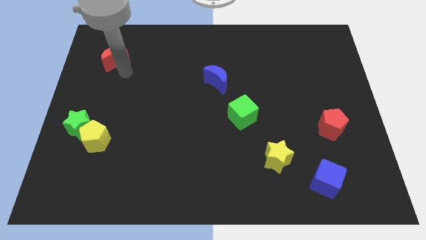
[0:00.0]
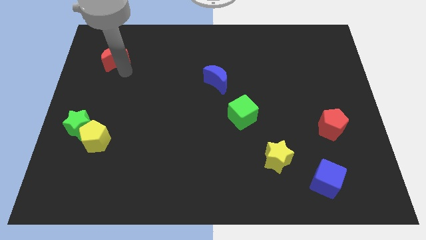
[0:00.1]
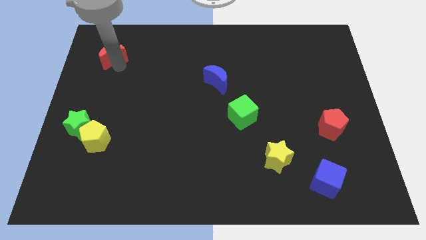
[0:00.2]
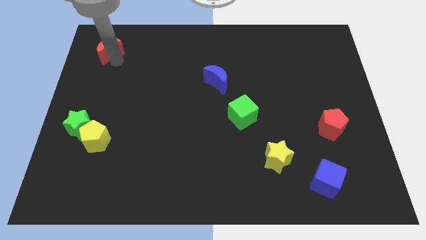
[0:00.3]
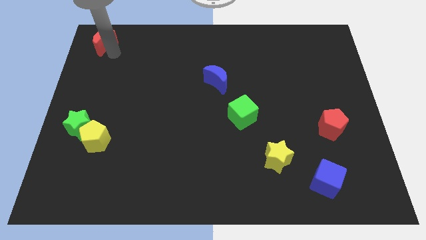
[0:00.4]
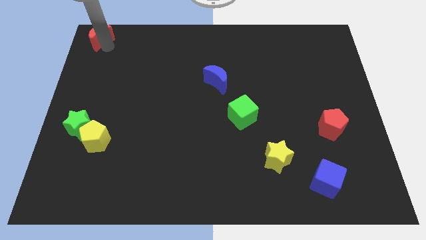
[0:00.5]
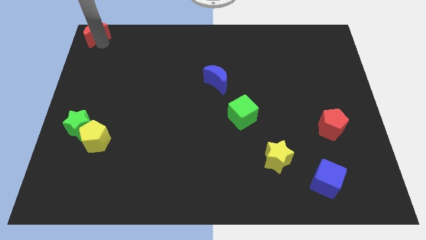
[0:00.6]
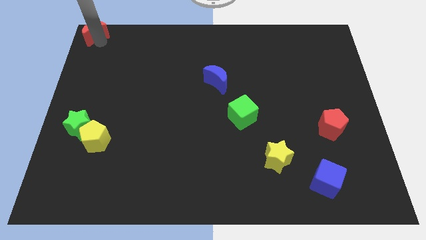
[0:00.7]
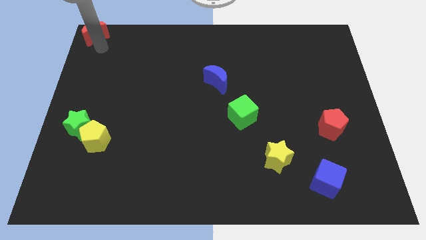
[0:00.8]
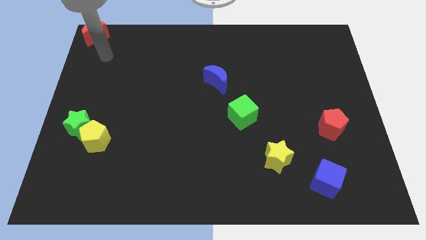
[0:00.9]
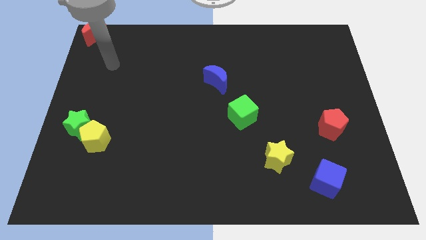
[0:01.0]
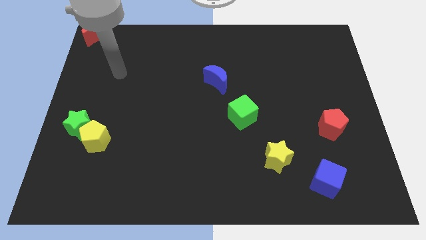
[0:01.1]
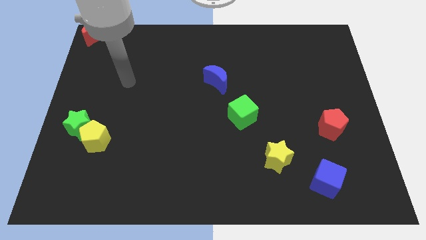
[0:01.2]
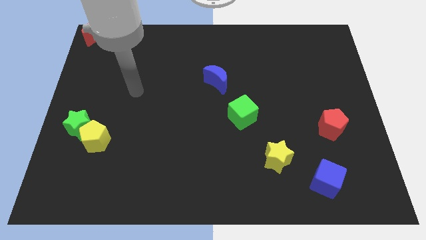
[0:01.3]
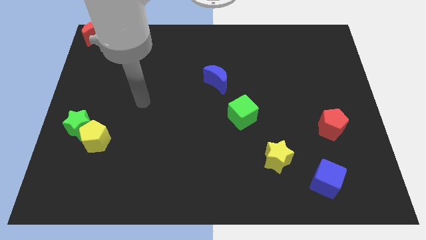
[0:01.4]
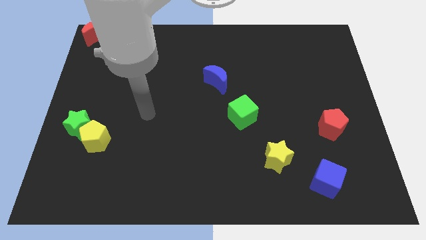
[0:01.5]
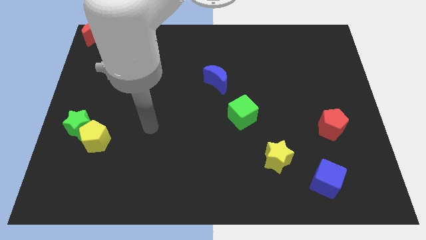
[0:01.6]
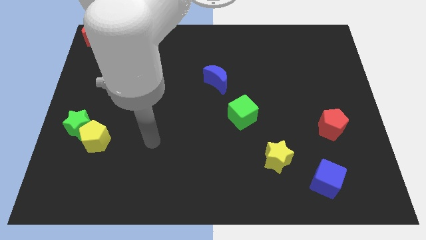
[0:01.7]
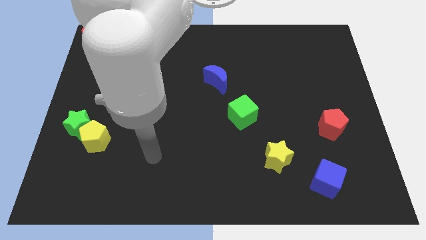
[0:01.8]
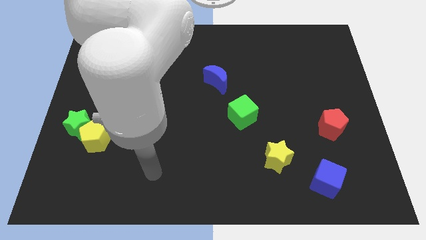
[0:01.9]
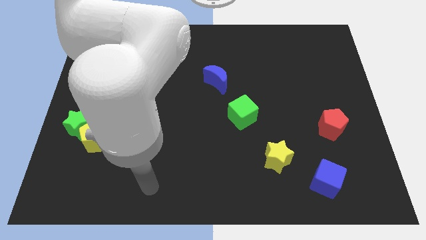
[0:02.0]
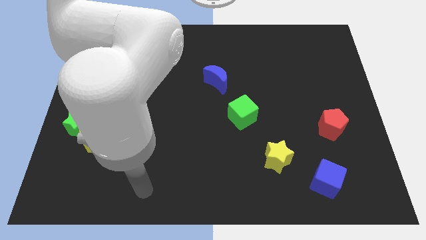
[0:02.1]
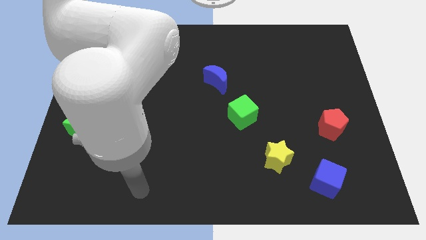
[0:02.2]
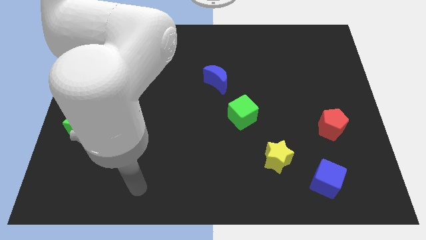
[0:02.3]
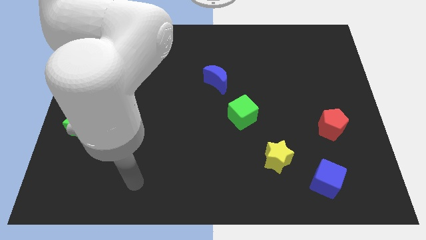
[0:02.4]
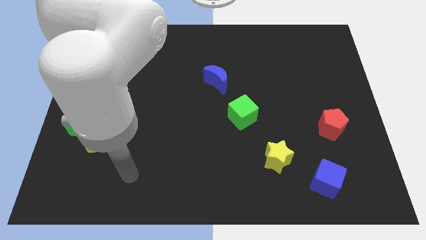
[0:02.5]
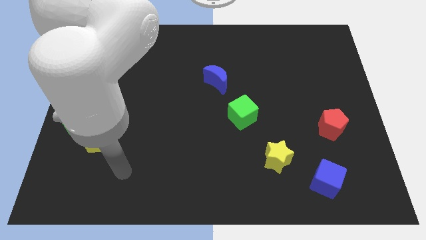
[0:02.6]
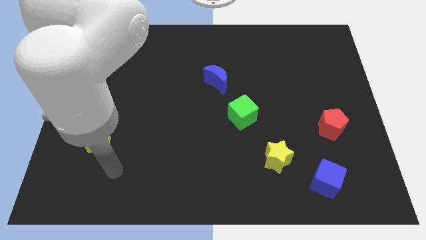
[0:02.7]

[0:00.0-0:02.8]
move red moon to the top left corner

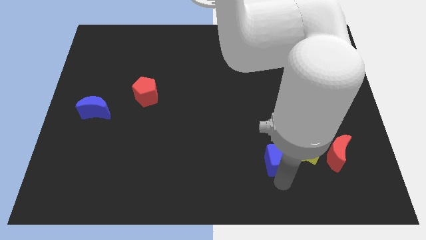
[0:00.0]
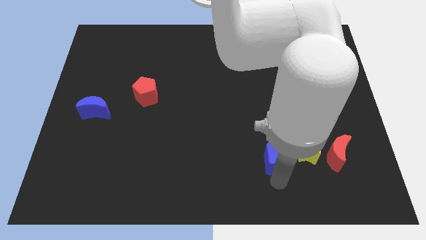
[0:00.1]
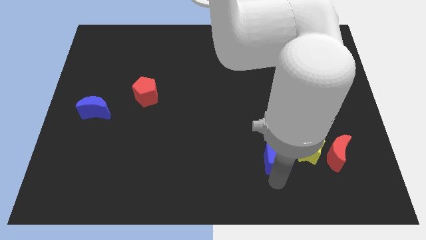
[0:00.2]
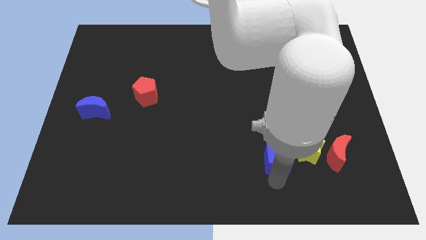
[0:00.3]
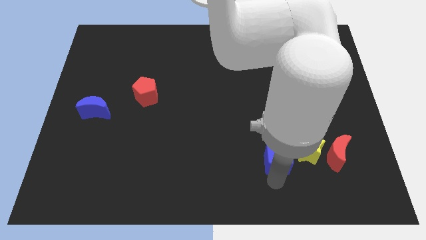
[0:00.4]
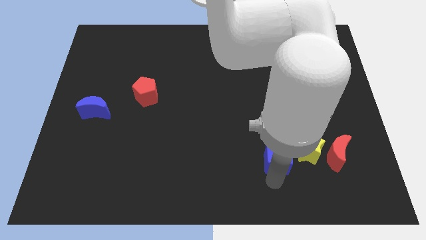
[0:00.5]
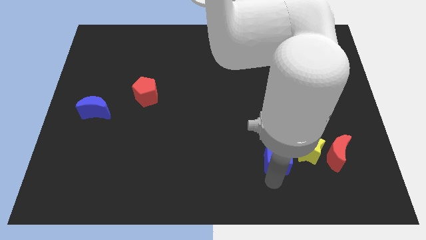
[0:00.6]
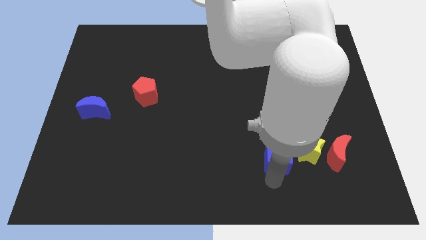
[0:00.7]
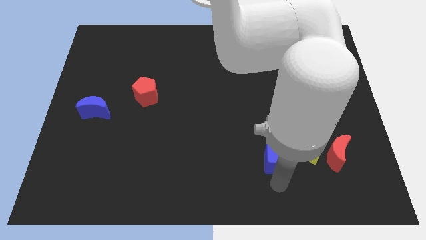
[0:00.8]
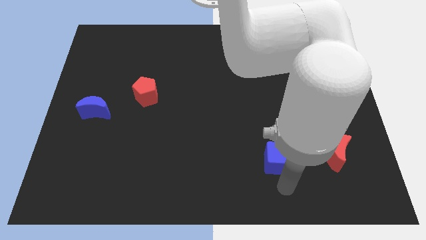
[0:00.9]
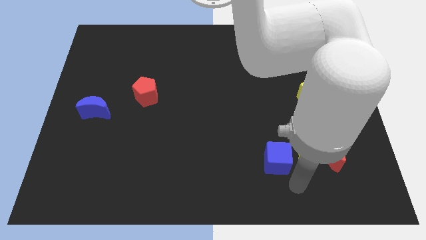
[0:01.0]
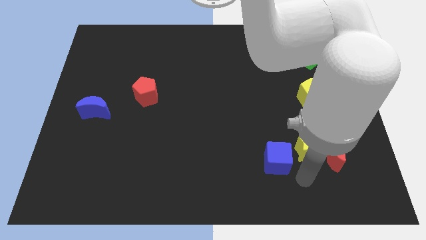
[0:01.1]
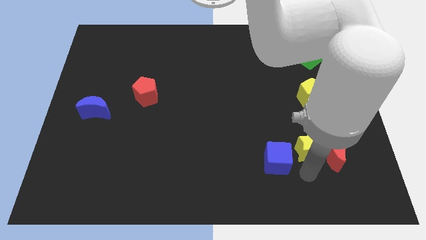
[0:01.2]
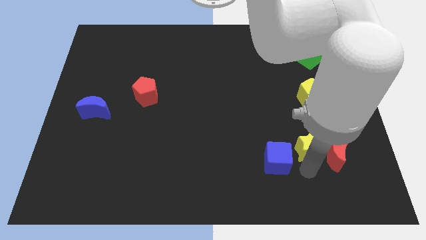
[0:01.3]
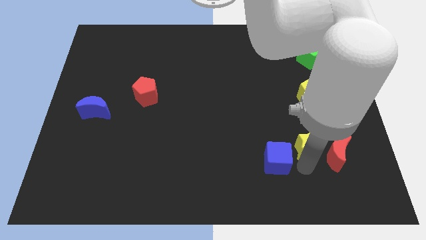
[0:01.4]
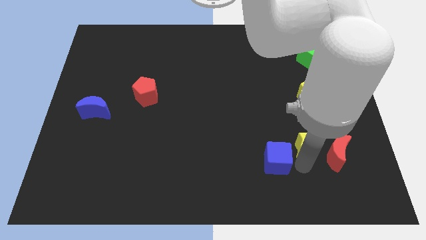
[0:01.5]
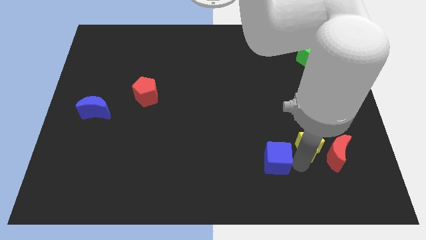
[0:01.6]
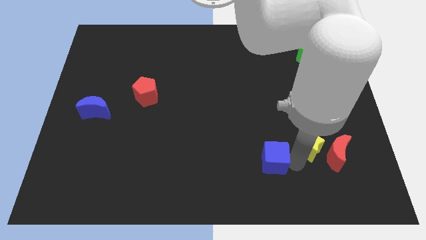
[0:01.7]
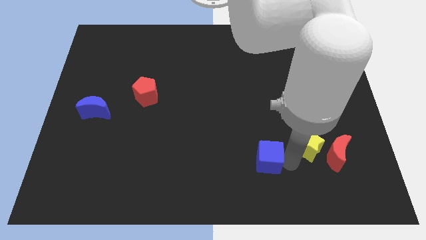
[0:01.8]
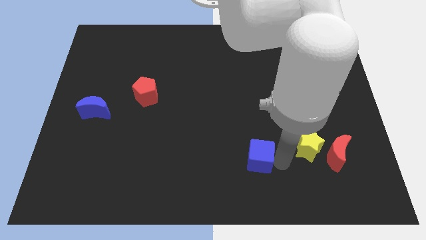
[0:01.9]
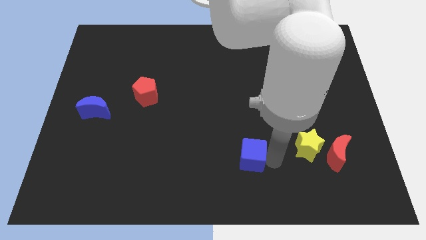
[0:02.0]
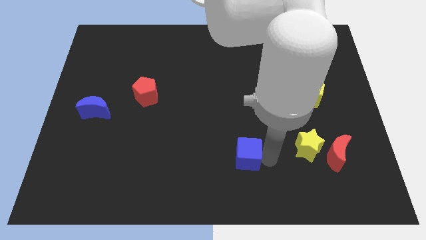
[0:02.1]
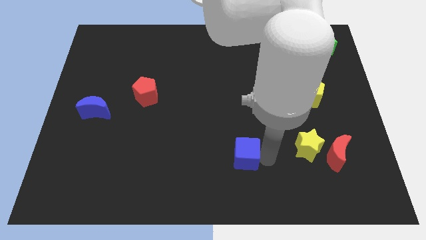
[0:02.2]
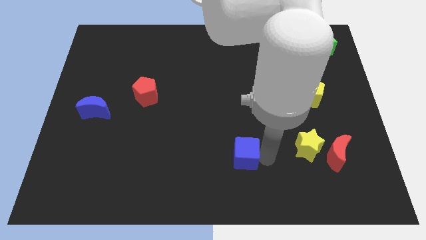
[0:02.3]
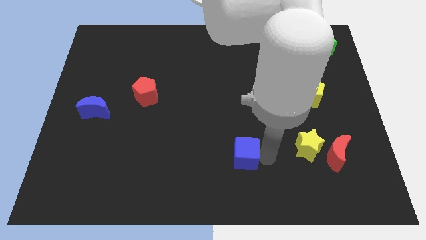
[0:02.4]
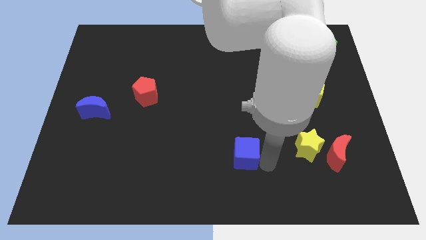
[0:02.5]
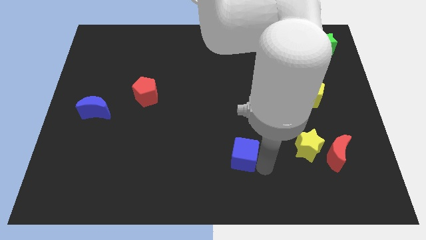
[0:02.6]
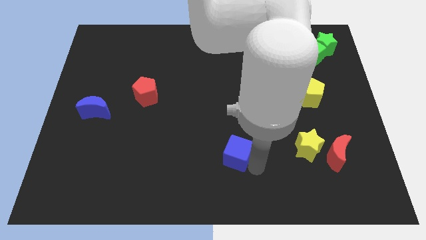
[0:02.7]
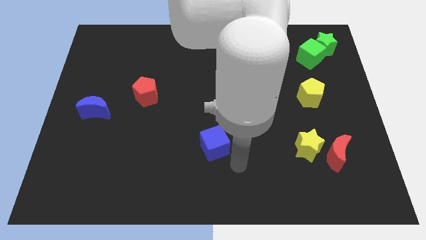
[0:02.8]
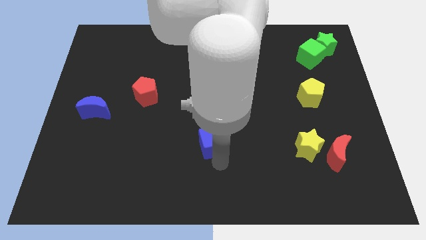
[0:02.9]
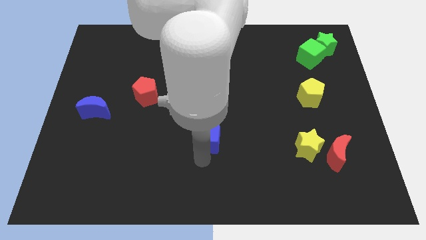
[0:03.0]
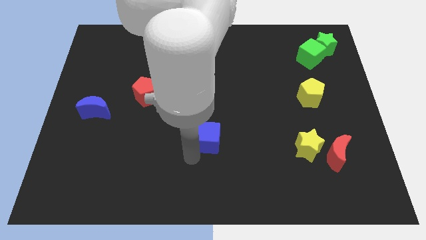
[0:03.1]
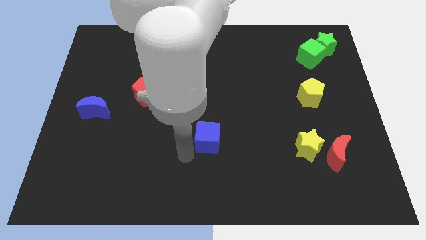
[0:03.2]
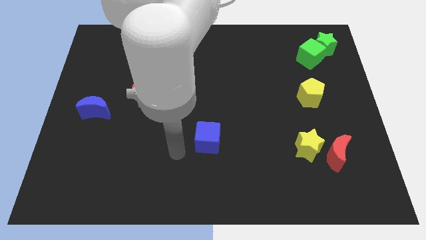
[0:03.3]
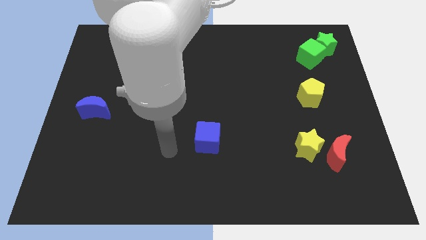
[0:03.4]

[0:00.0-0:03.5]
move the blue cube away from the yellow star

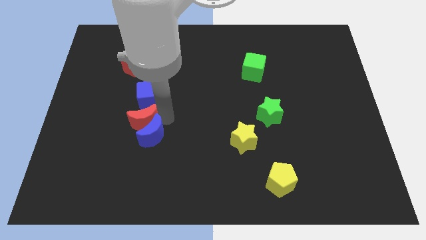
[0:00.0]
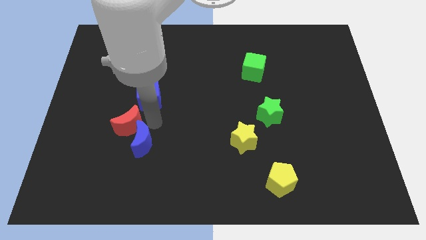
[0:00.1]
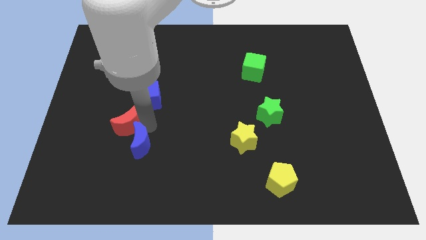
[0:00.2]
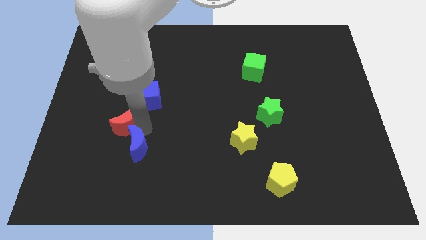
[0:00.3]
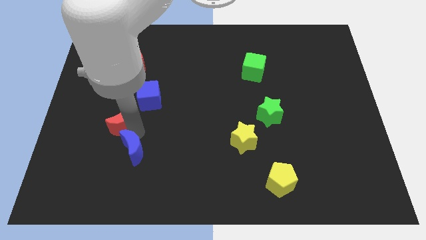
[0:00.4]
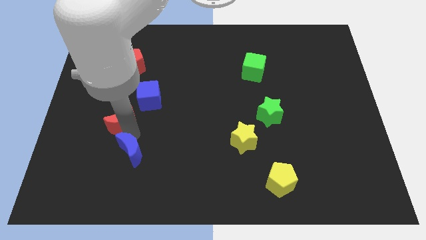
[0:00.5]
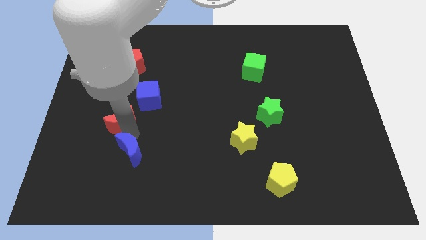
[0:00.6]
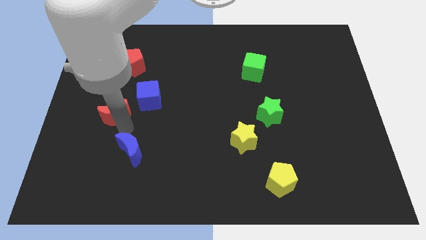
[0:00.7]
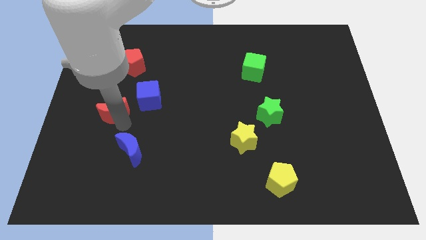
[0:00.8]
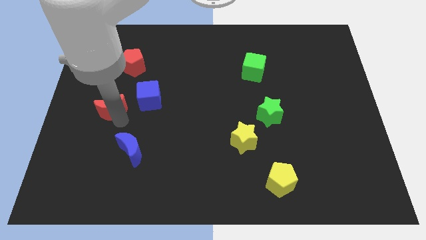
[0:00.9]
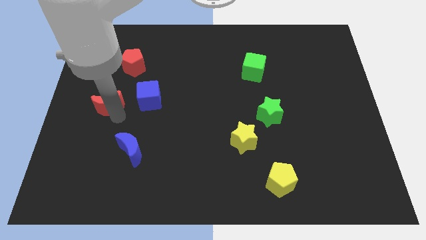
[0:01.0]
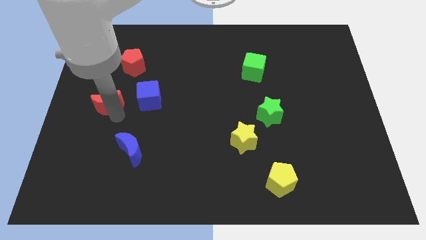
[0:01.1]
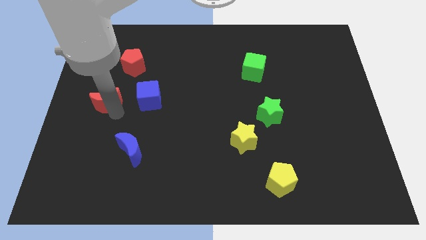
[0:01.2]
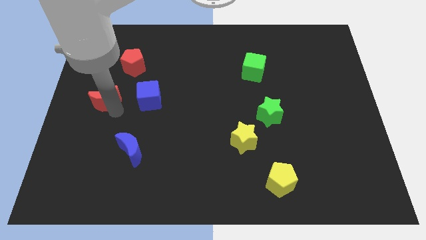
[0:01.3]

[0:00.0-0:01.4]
move the red crescent to the left of the blue cube

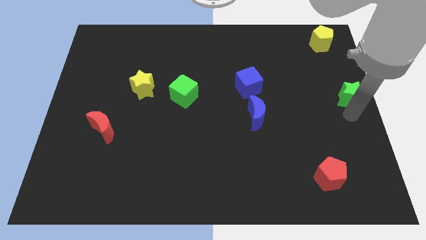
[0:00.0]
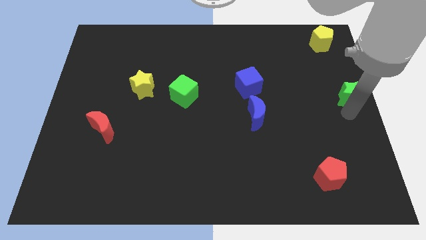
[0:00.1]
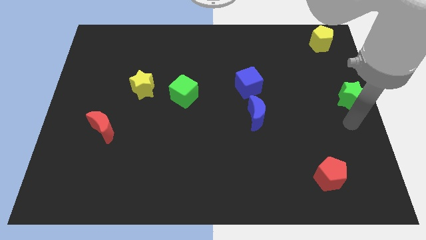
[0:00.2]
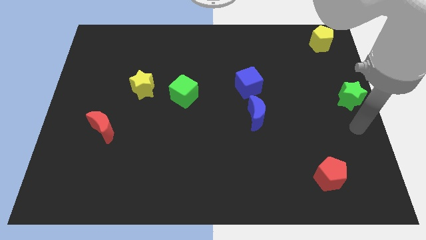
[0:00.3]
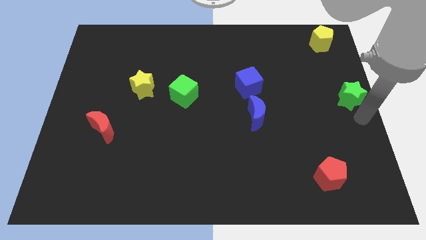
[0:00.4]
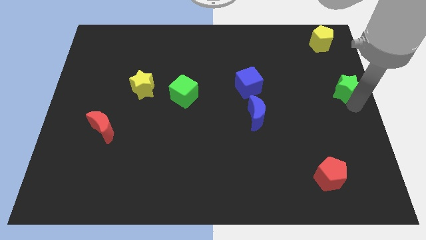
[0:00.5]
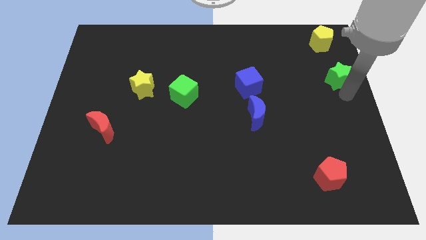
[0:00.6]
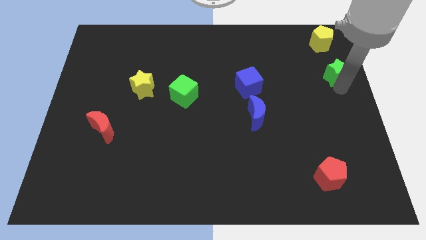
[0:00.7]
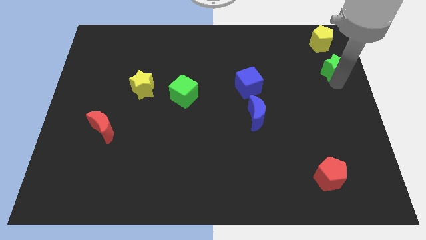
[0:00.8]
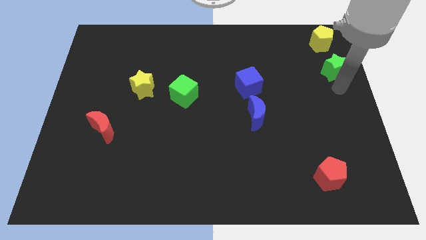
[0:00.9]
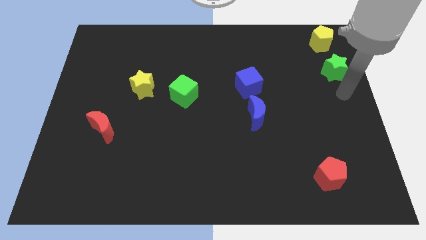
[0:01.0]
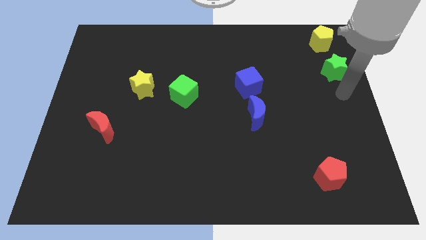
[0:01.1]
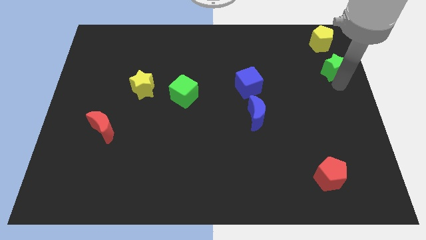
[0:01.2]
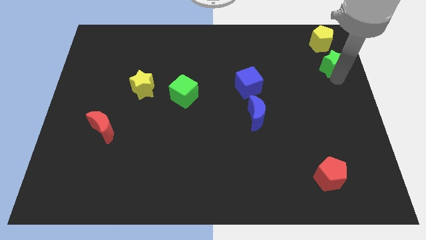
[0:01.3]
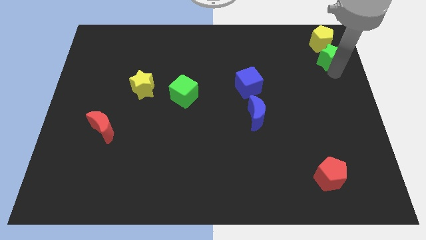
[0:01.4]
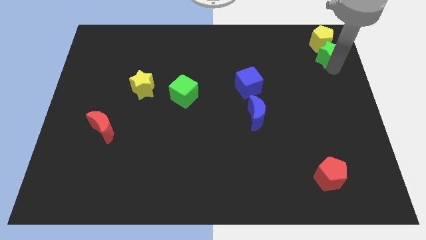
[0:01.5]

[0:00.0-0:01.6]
push the green star to the bottom of the yellow pentagon
